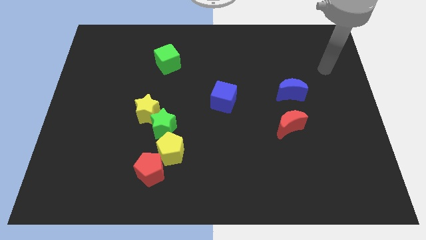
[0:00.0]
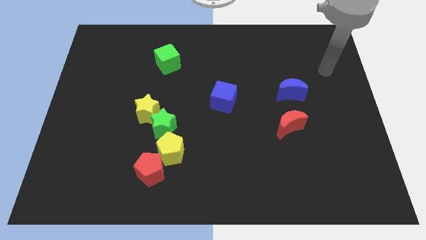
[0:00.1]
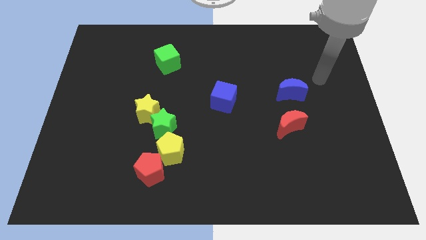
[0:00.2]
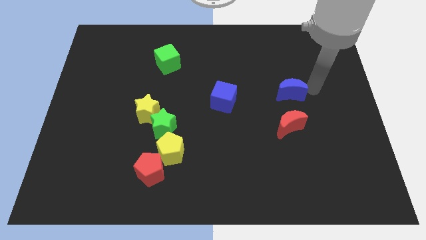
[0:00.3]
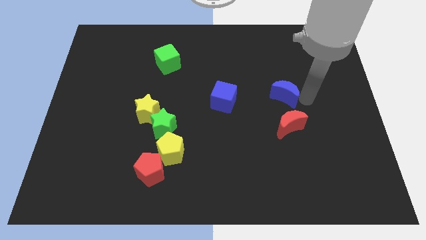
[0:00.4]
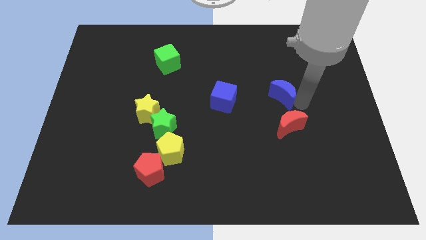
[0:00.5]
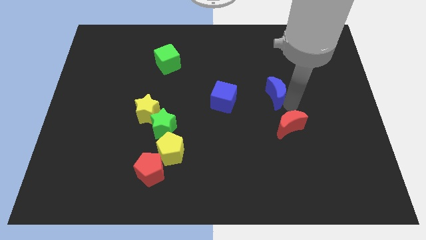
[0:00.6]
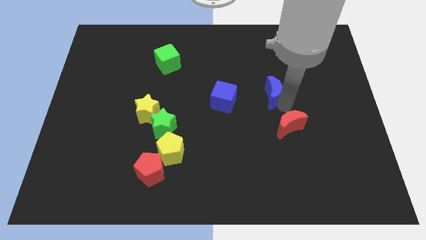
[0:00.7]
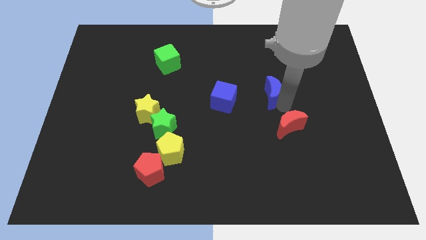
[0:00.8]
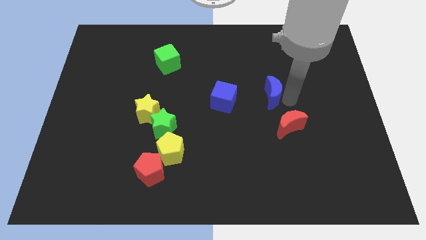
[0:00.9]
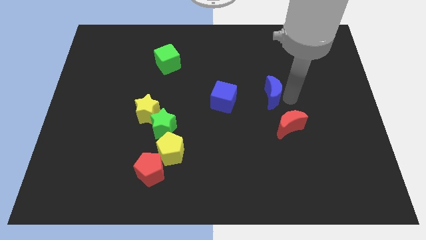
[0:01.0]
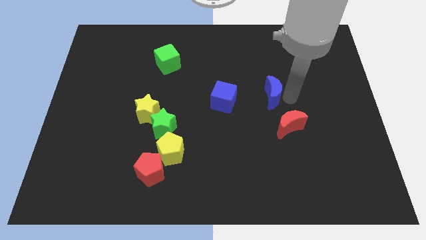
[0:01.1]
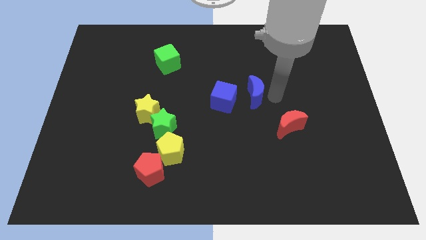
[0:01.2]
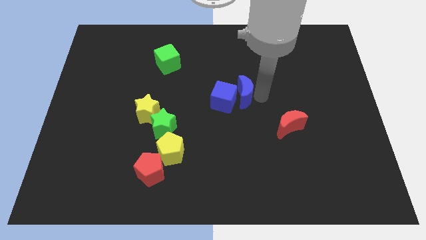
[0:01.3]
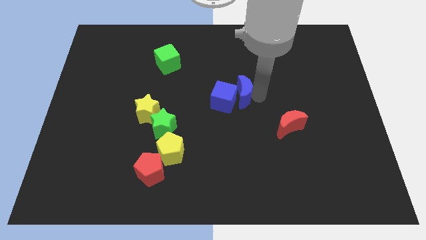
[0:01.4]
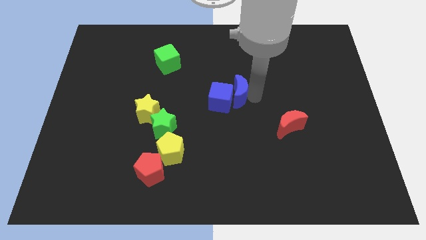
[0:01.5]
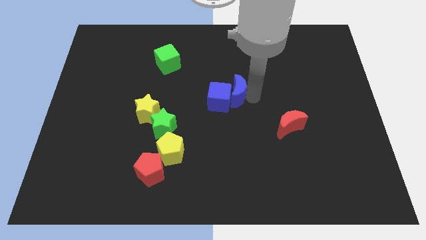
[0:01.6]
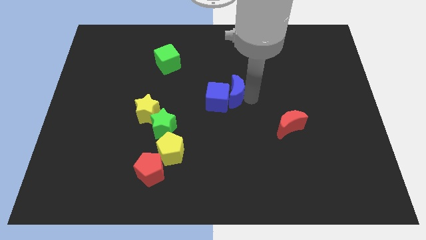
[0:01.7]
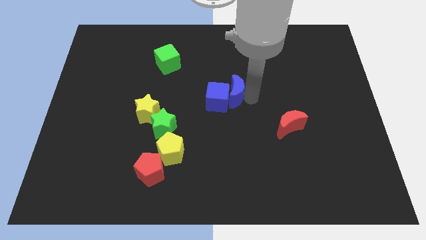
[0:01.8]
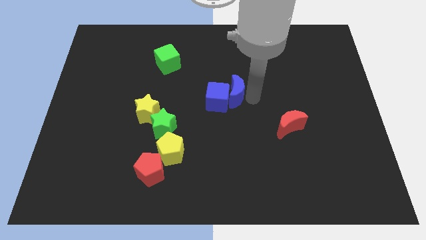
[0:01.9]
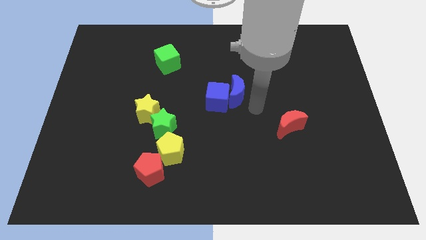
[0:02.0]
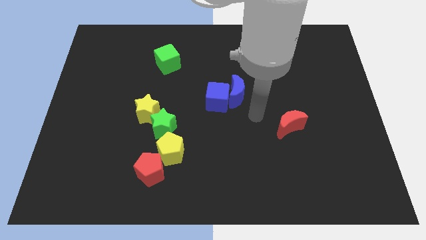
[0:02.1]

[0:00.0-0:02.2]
join the blue blocks together at the center of the board

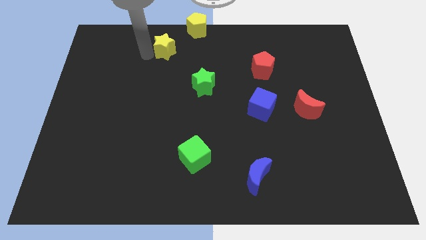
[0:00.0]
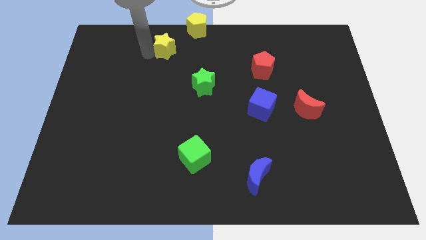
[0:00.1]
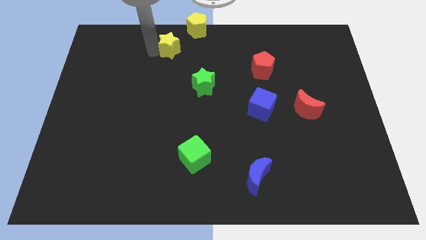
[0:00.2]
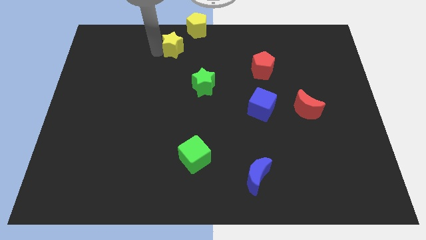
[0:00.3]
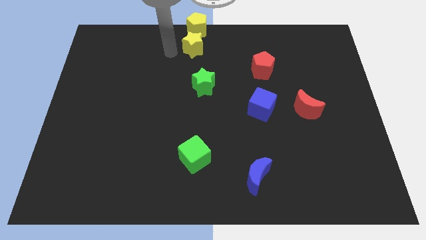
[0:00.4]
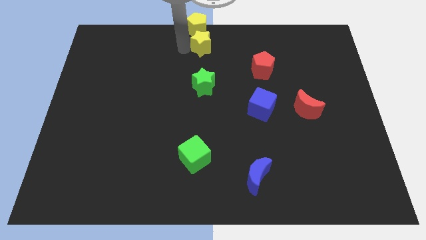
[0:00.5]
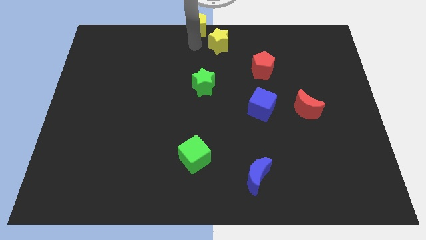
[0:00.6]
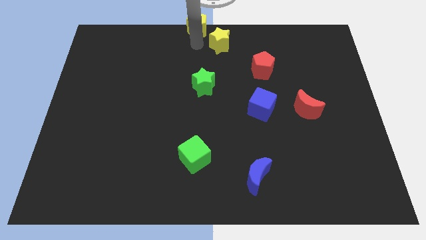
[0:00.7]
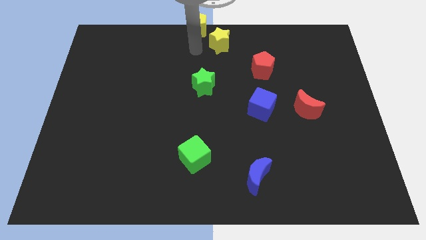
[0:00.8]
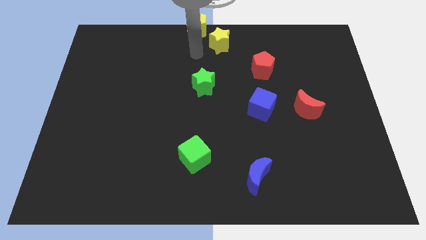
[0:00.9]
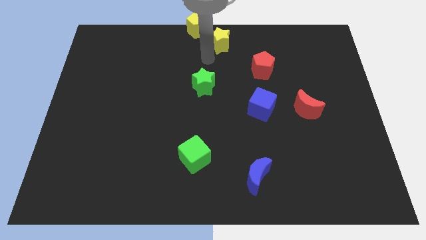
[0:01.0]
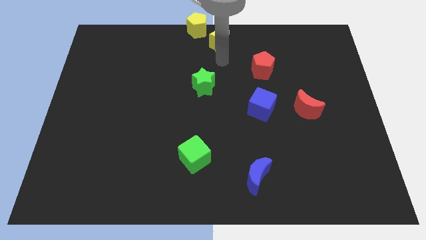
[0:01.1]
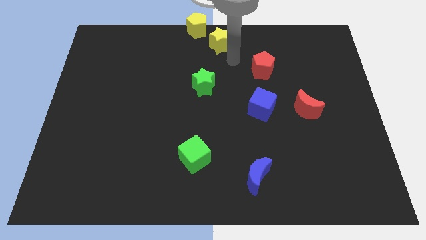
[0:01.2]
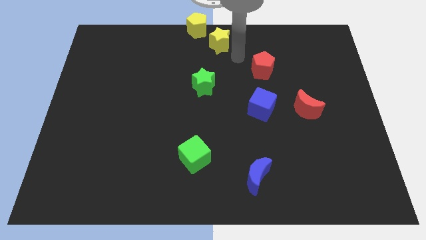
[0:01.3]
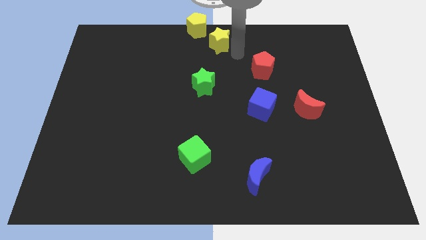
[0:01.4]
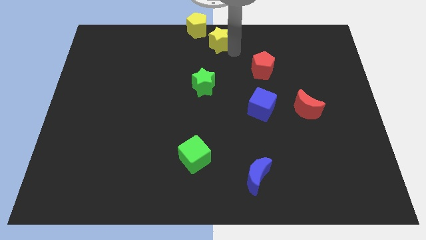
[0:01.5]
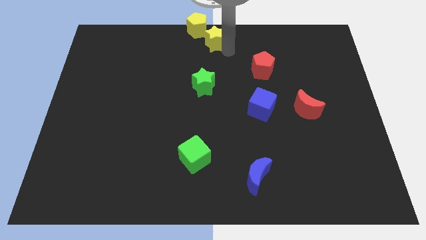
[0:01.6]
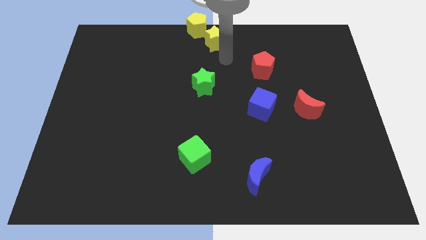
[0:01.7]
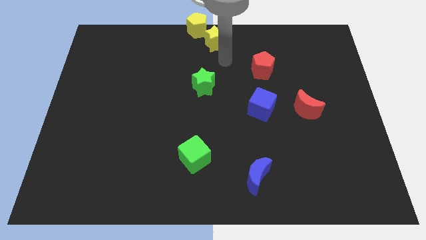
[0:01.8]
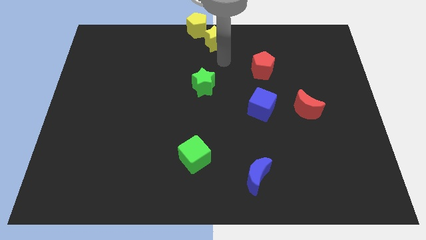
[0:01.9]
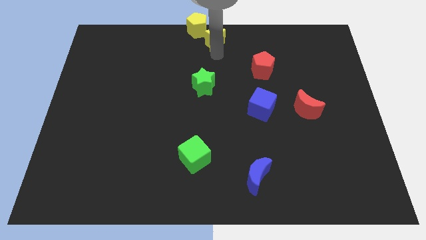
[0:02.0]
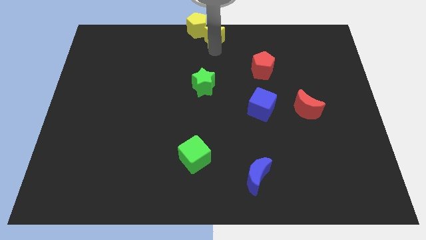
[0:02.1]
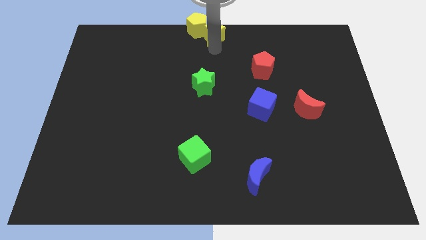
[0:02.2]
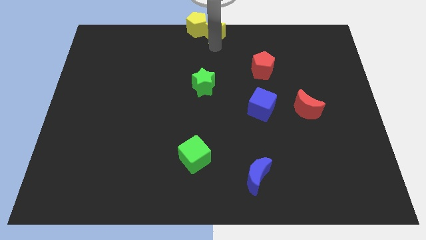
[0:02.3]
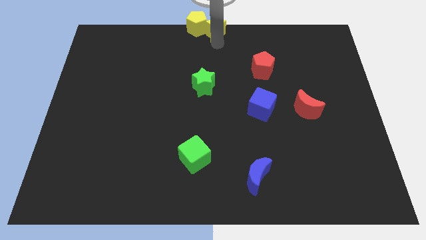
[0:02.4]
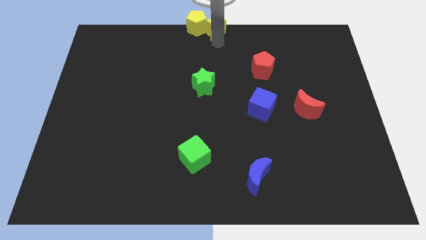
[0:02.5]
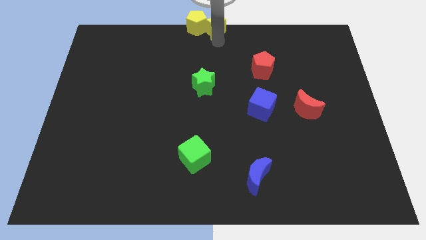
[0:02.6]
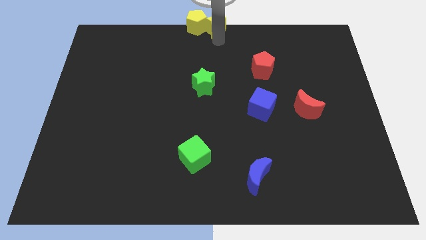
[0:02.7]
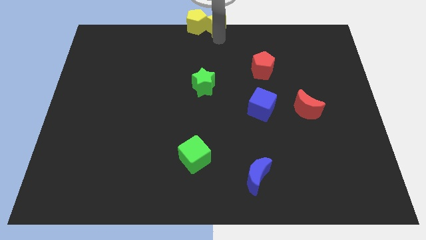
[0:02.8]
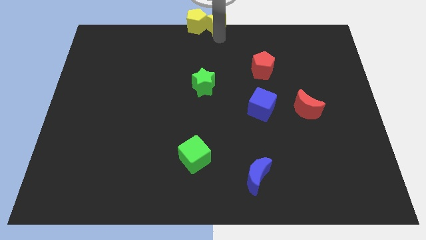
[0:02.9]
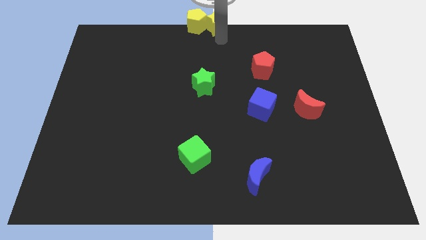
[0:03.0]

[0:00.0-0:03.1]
move the yellow star to the right of the yellow pentagon

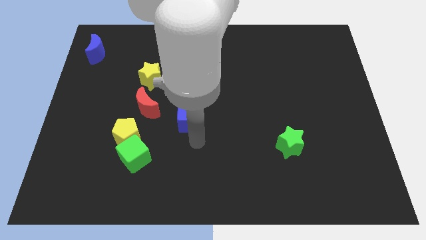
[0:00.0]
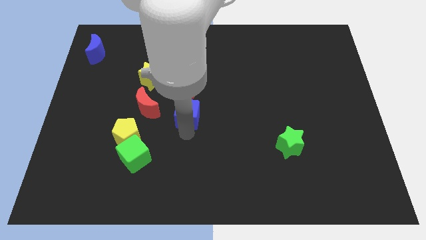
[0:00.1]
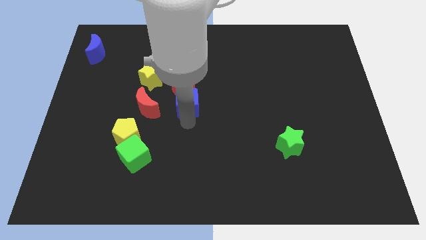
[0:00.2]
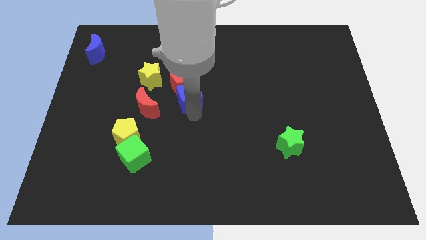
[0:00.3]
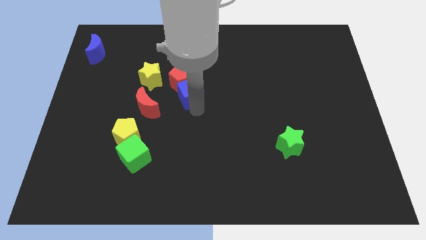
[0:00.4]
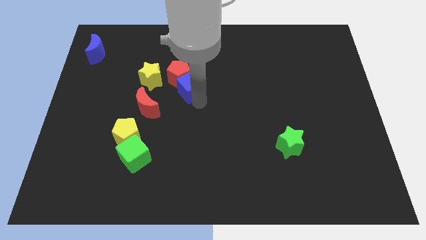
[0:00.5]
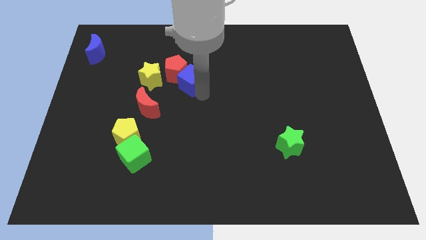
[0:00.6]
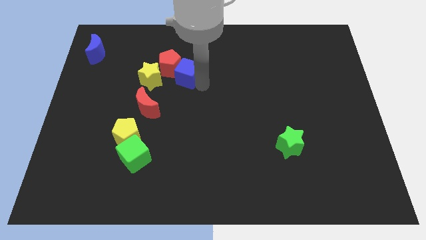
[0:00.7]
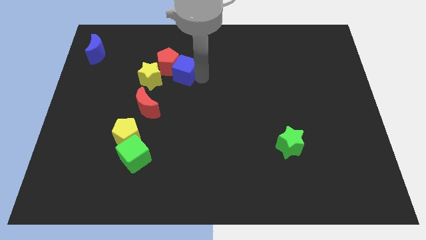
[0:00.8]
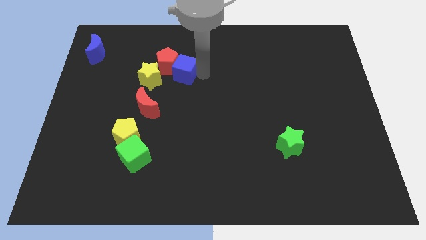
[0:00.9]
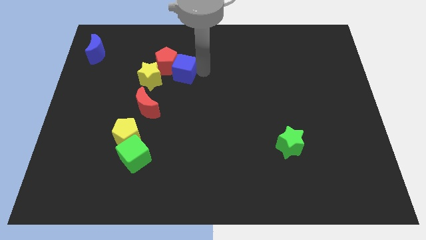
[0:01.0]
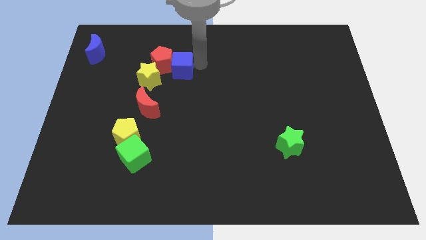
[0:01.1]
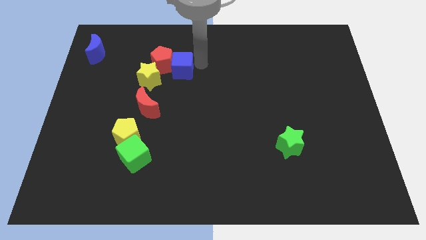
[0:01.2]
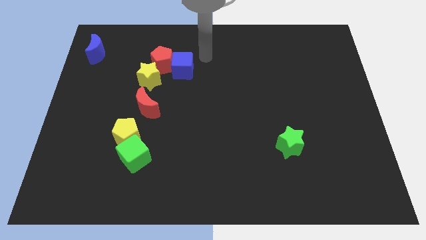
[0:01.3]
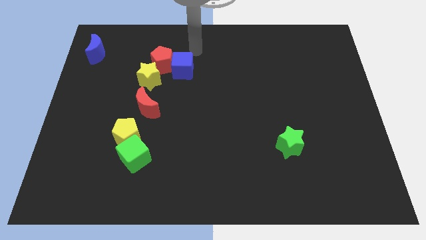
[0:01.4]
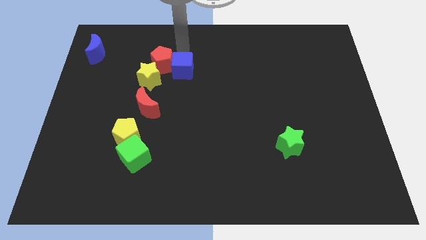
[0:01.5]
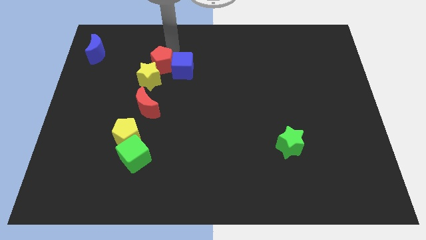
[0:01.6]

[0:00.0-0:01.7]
push the blue cube into the red pentagon

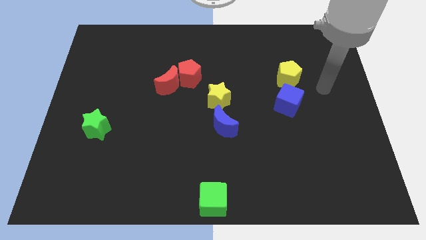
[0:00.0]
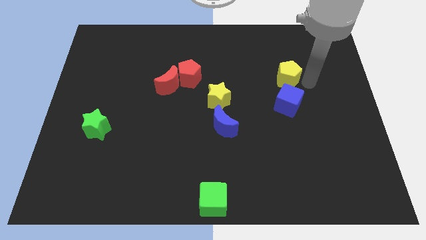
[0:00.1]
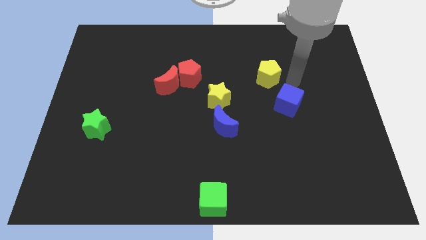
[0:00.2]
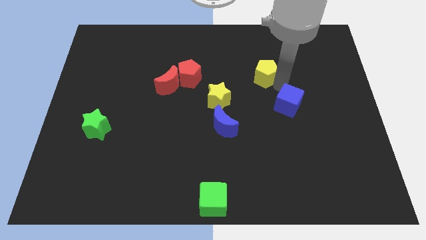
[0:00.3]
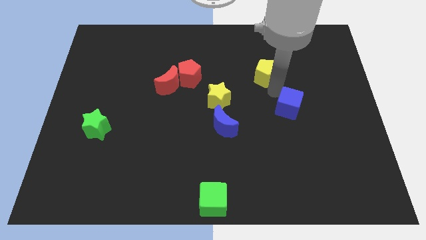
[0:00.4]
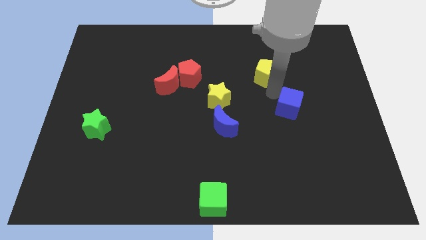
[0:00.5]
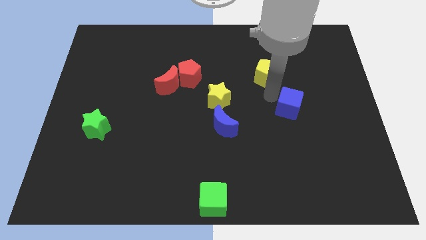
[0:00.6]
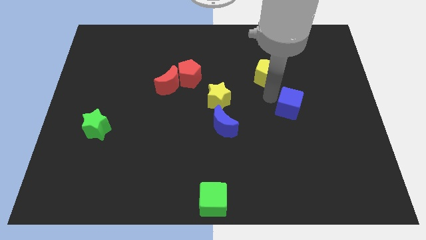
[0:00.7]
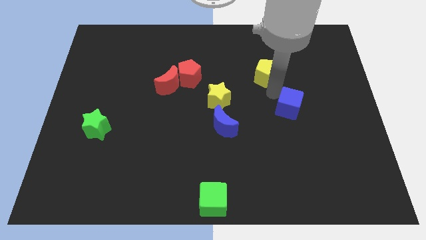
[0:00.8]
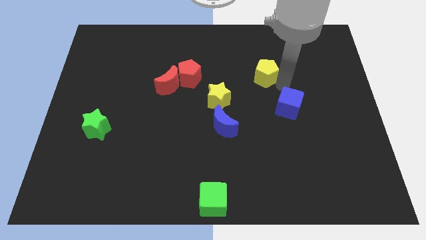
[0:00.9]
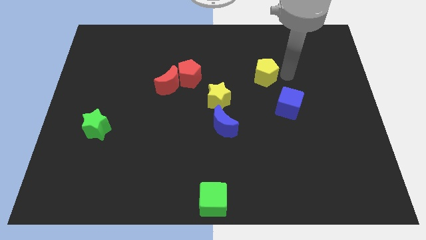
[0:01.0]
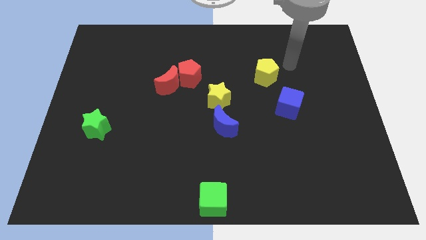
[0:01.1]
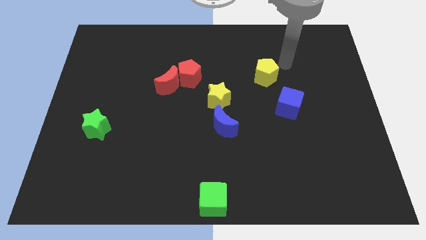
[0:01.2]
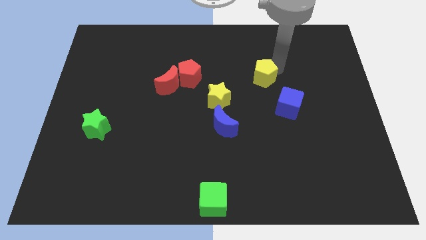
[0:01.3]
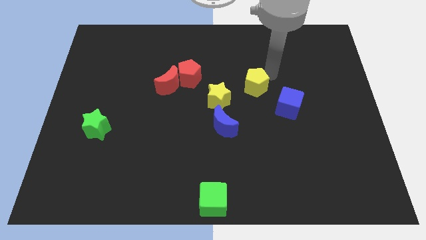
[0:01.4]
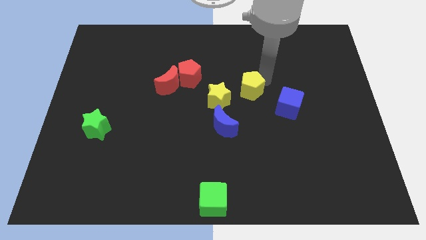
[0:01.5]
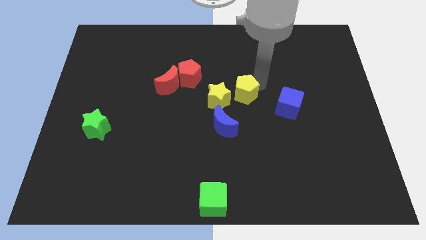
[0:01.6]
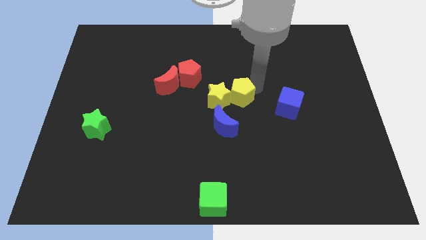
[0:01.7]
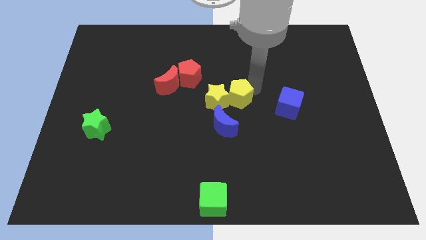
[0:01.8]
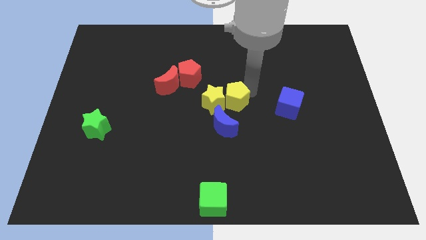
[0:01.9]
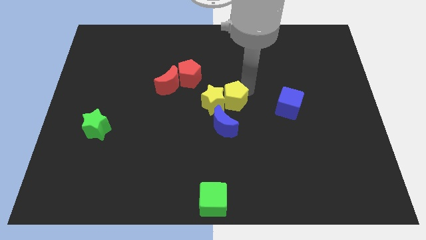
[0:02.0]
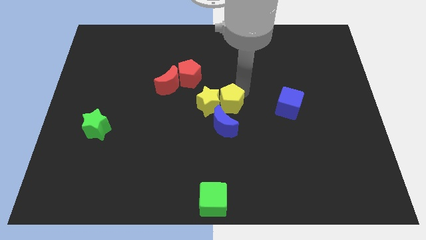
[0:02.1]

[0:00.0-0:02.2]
move the yellow pentagon into the yellow star
